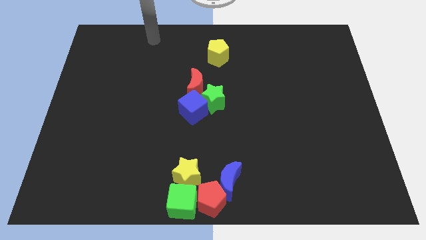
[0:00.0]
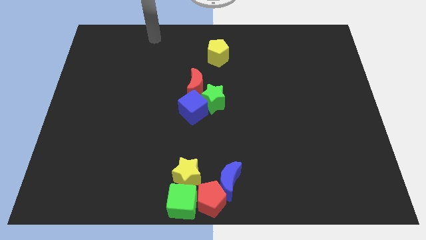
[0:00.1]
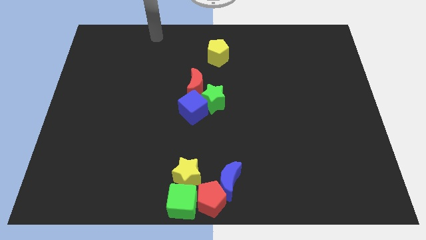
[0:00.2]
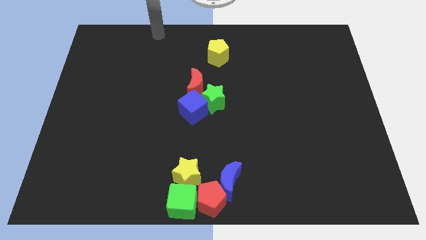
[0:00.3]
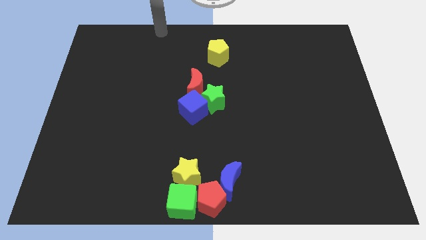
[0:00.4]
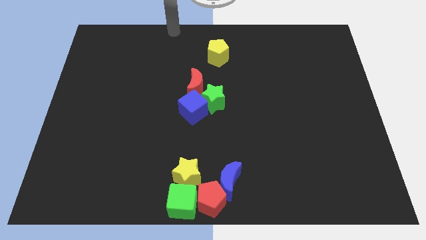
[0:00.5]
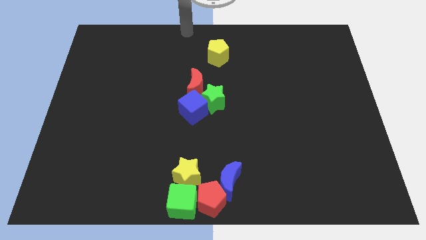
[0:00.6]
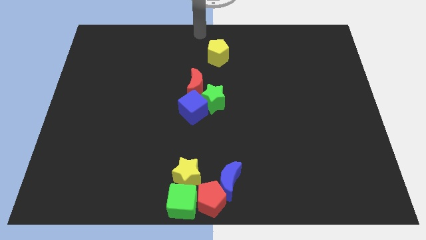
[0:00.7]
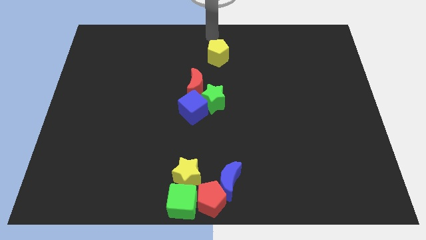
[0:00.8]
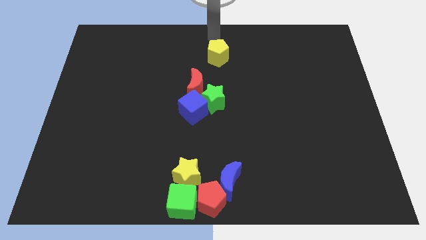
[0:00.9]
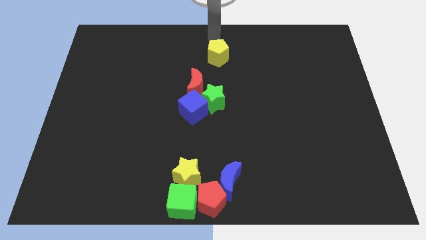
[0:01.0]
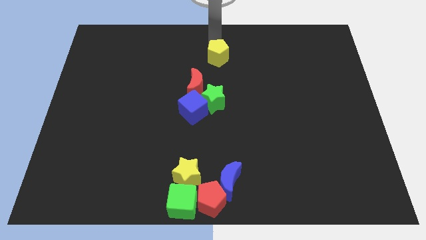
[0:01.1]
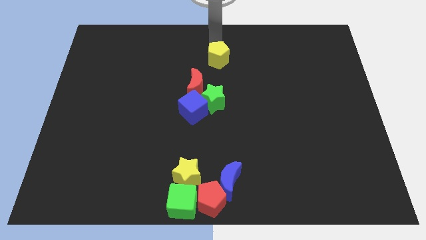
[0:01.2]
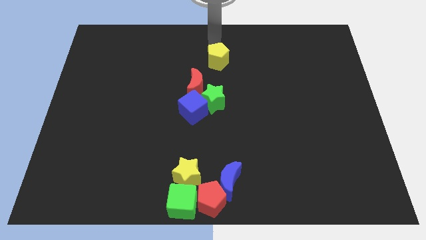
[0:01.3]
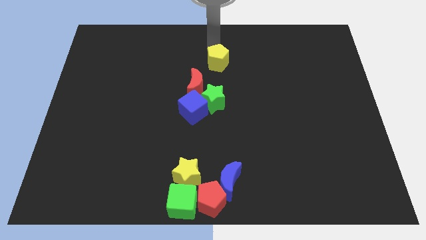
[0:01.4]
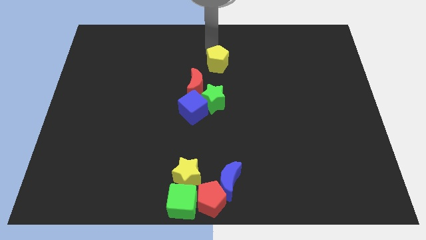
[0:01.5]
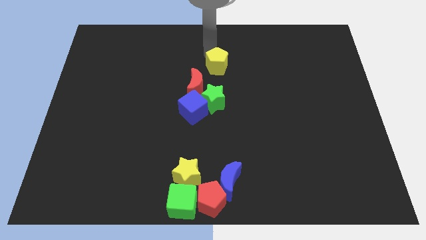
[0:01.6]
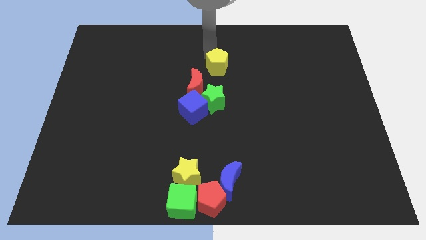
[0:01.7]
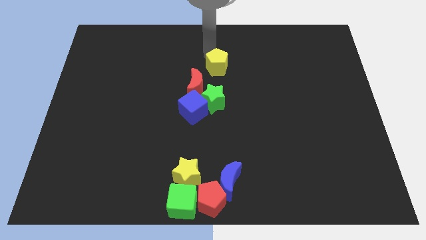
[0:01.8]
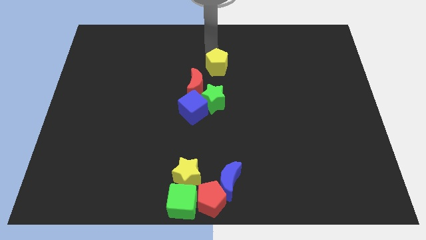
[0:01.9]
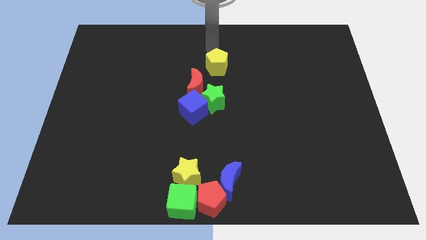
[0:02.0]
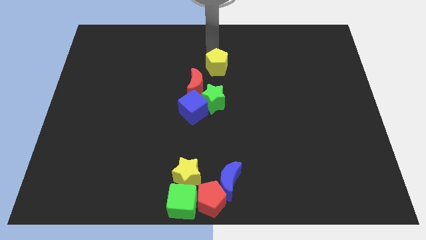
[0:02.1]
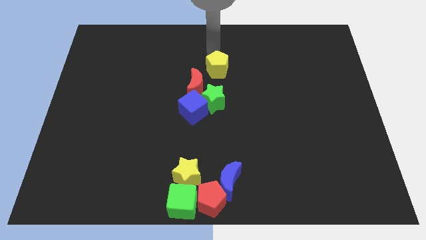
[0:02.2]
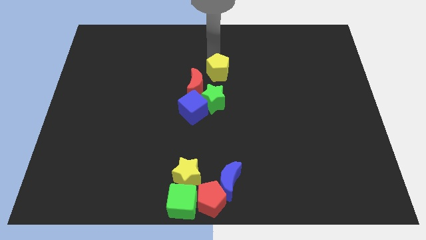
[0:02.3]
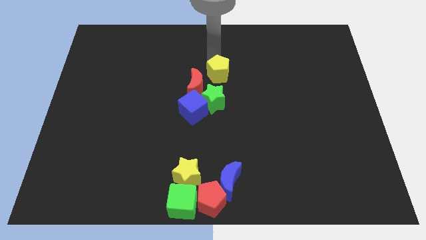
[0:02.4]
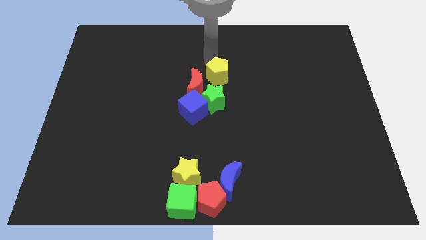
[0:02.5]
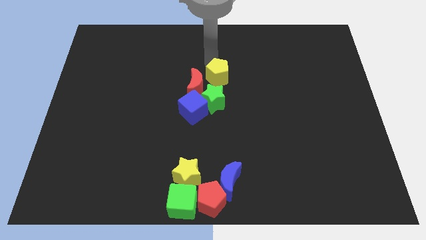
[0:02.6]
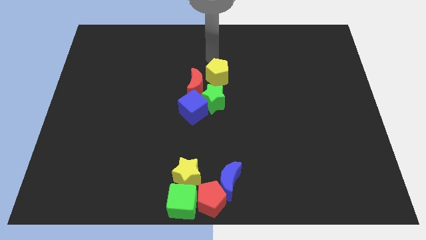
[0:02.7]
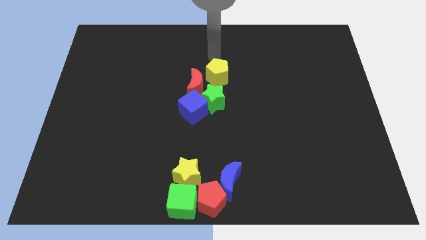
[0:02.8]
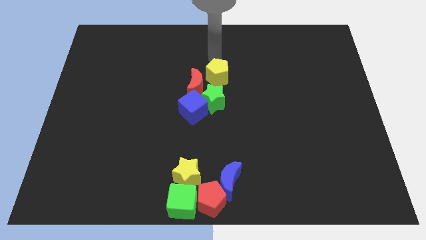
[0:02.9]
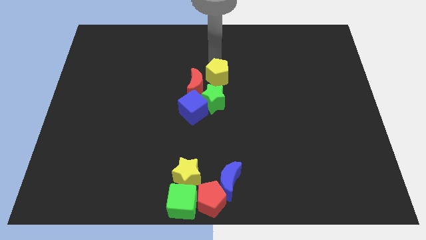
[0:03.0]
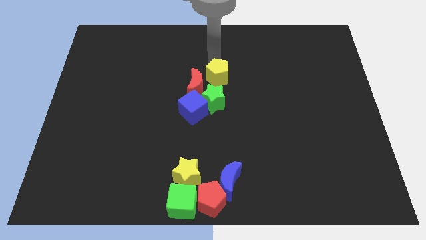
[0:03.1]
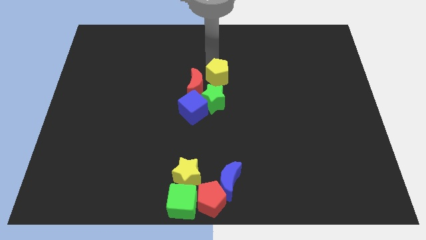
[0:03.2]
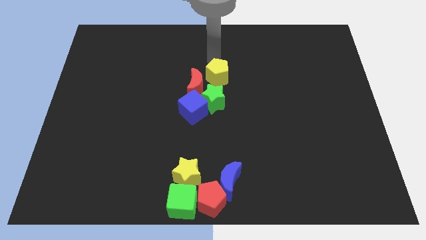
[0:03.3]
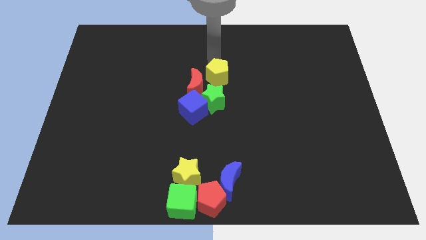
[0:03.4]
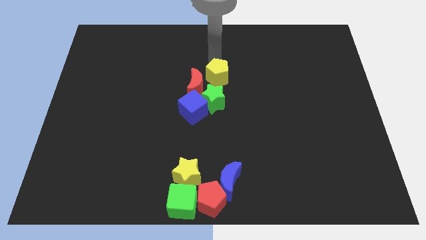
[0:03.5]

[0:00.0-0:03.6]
push the yellow pentagon towards green star

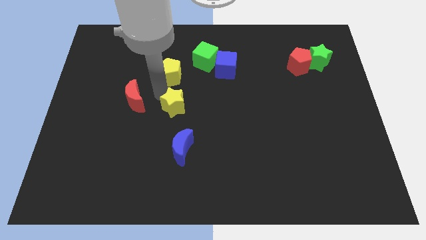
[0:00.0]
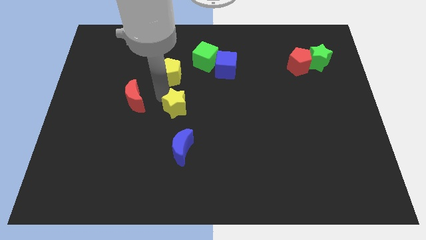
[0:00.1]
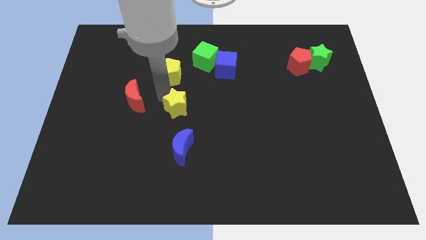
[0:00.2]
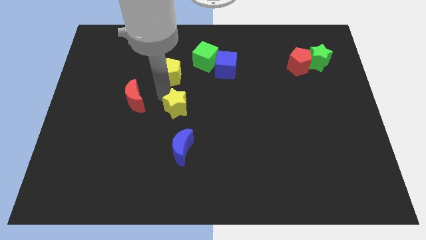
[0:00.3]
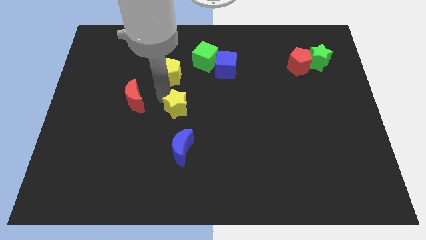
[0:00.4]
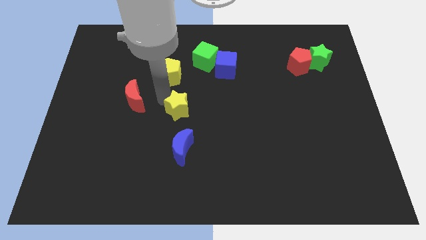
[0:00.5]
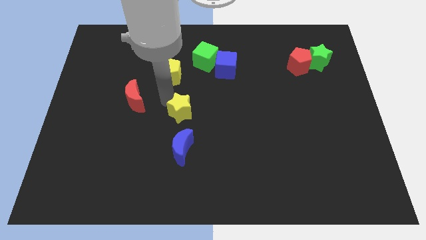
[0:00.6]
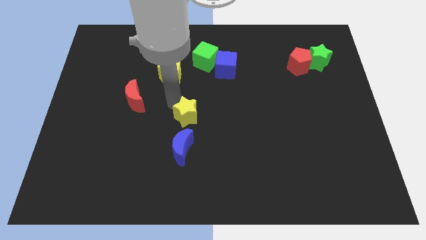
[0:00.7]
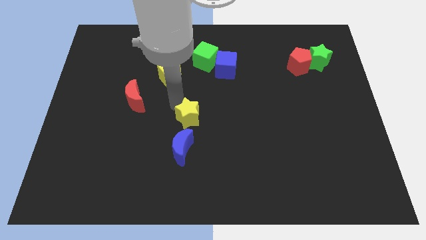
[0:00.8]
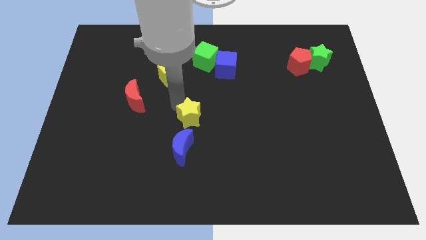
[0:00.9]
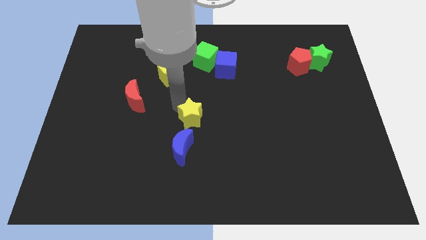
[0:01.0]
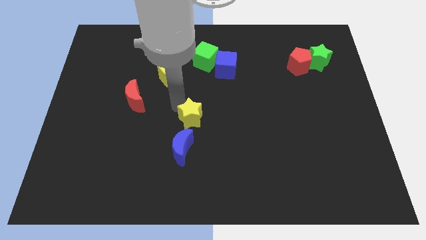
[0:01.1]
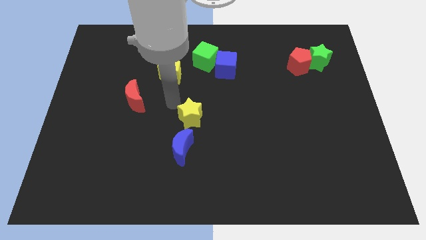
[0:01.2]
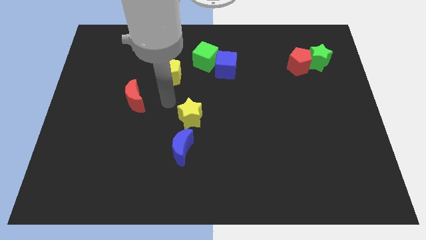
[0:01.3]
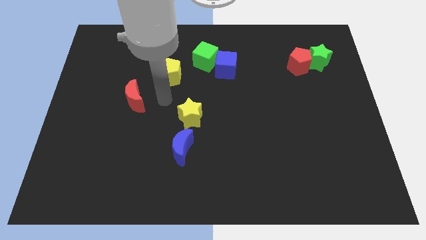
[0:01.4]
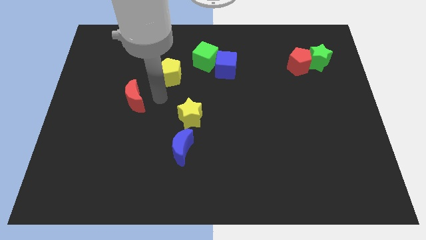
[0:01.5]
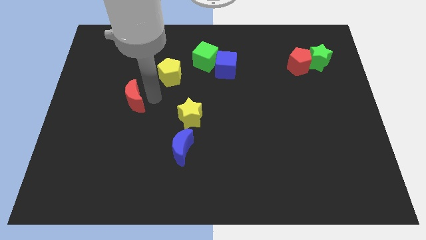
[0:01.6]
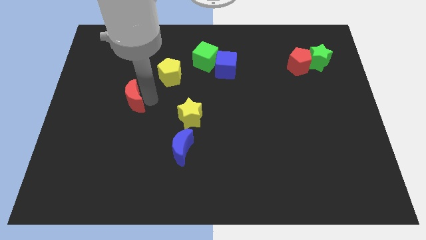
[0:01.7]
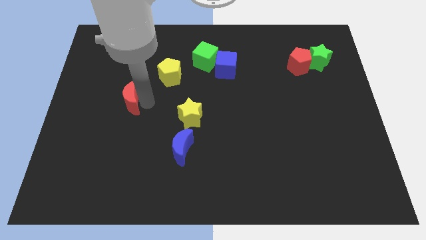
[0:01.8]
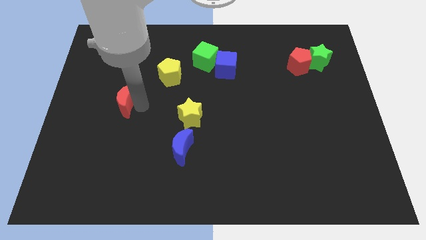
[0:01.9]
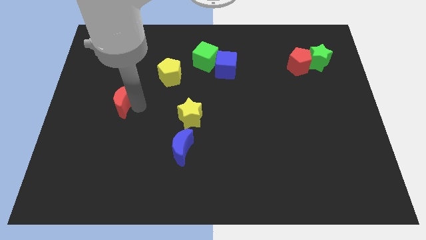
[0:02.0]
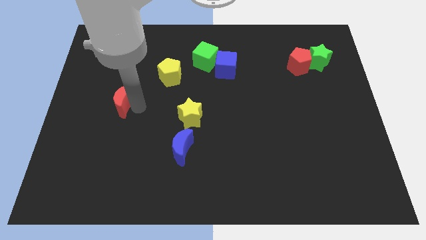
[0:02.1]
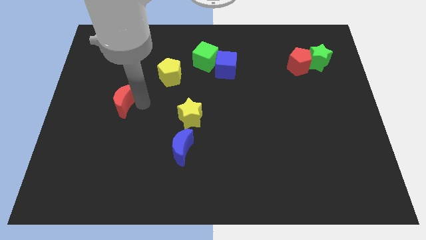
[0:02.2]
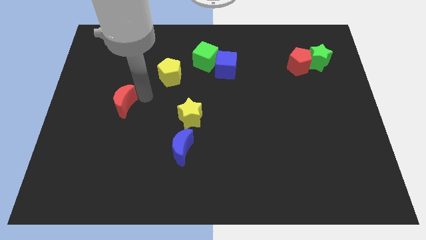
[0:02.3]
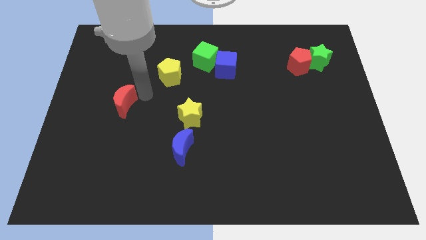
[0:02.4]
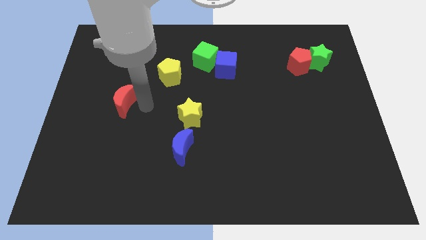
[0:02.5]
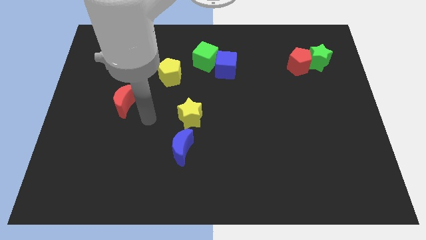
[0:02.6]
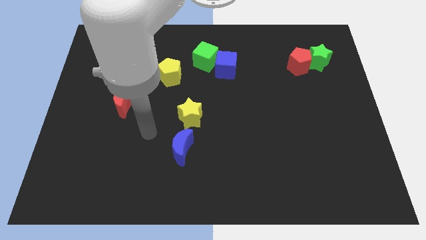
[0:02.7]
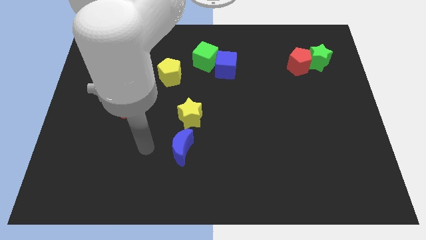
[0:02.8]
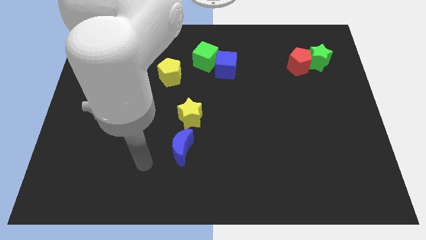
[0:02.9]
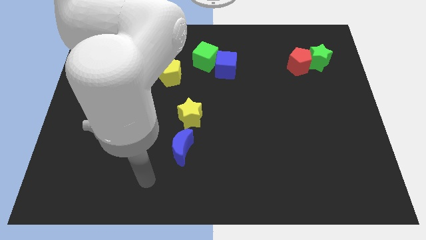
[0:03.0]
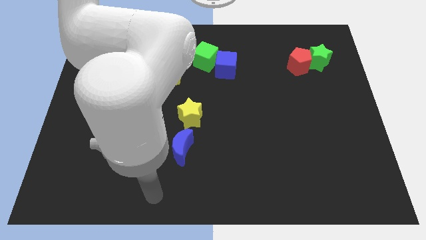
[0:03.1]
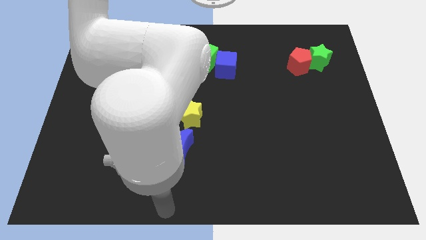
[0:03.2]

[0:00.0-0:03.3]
separate the yellow star and the red moon

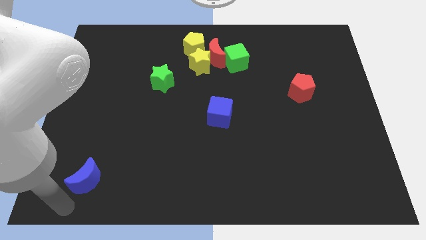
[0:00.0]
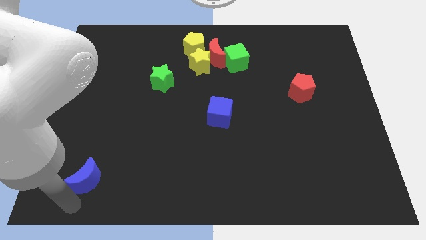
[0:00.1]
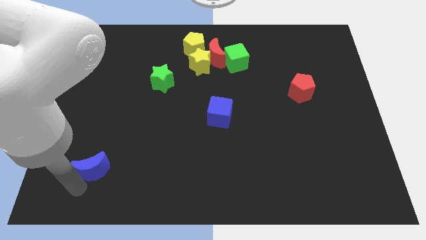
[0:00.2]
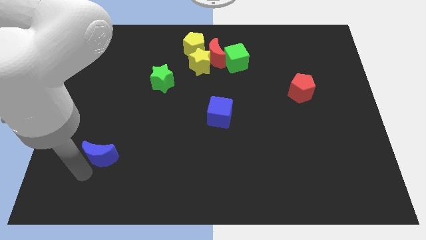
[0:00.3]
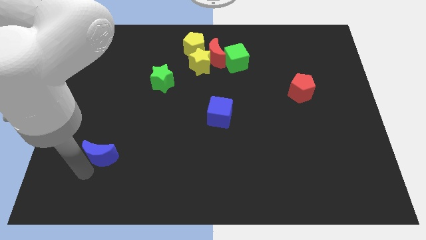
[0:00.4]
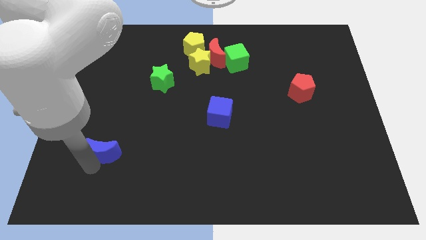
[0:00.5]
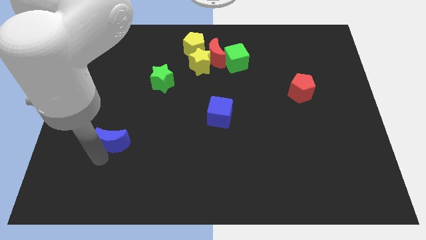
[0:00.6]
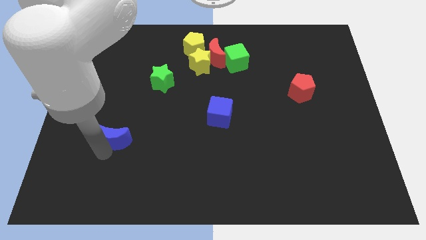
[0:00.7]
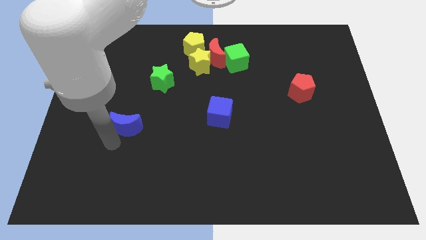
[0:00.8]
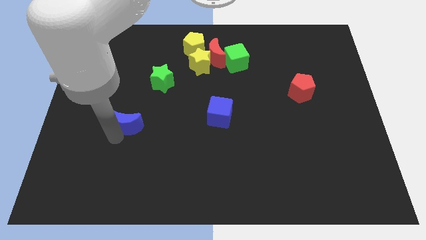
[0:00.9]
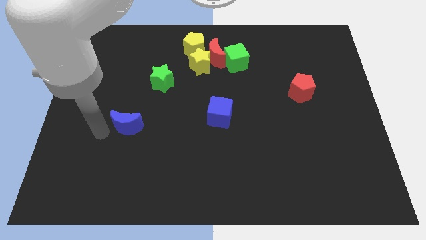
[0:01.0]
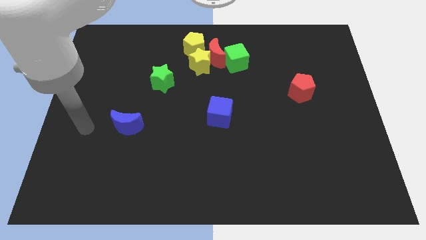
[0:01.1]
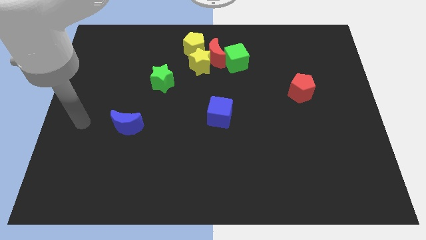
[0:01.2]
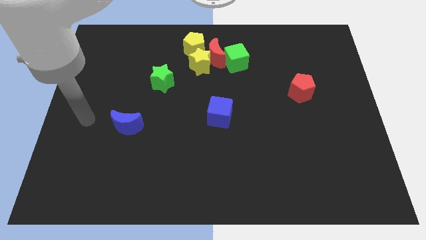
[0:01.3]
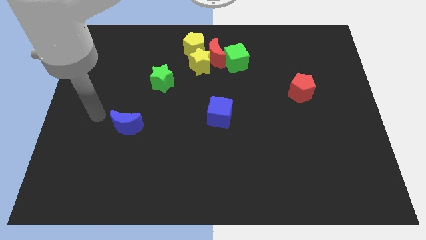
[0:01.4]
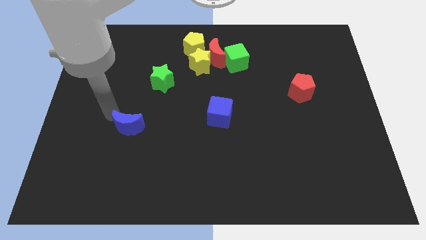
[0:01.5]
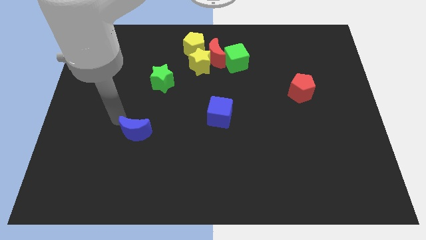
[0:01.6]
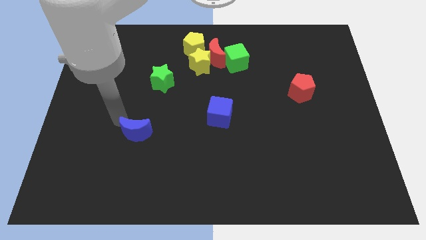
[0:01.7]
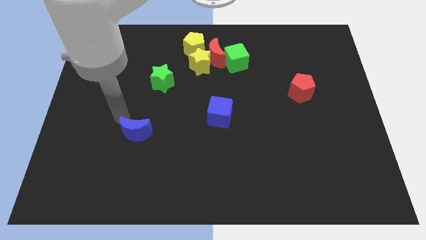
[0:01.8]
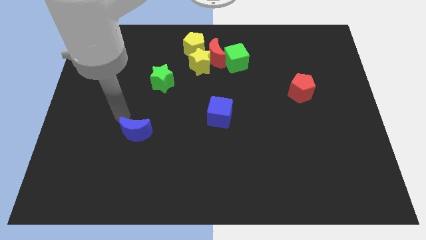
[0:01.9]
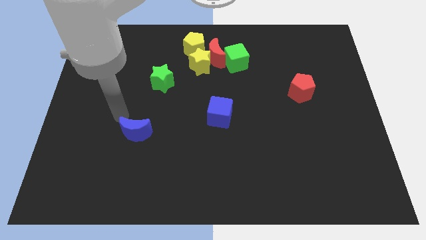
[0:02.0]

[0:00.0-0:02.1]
push the blue moon towards the left of the blue cube

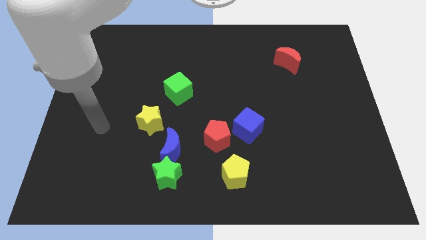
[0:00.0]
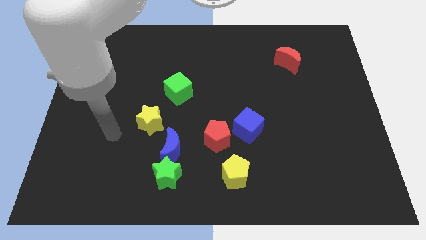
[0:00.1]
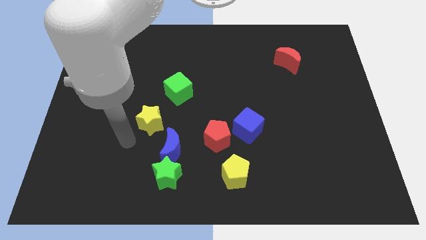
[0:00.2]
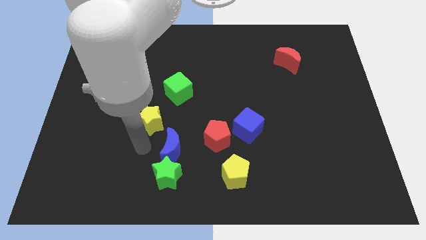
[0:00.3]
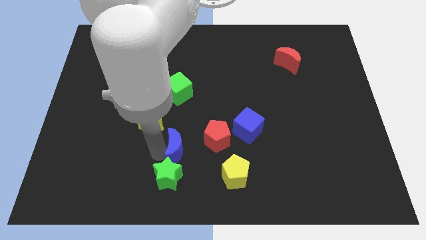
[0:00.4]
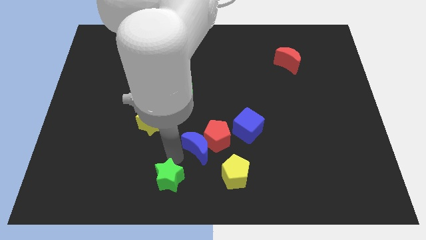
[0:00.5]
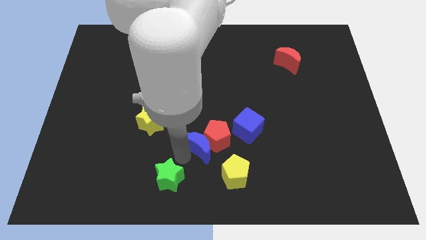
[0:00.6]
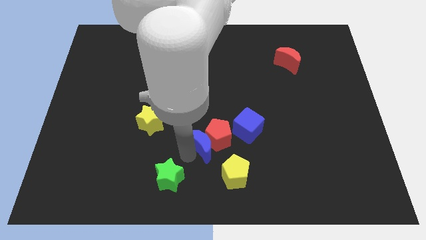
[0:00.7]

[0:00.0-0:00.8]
push blue crescent near to red pentagon
